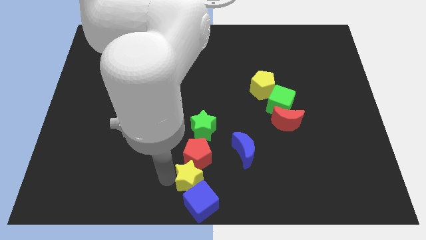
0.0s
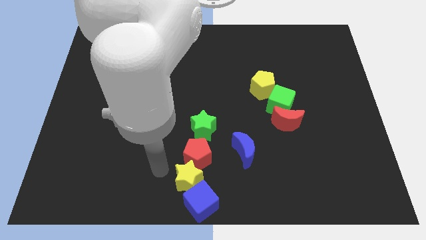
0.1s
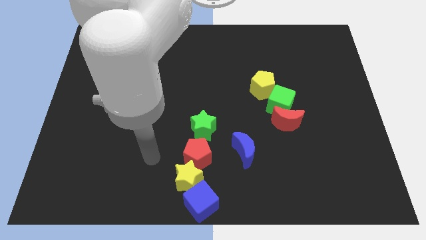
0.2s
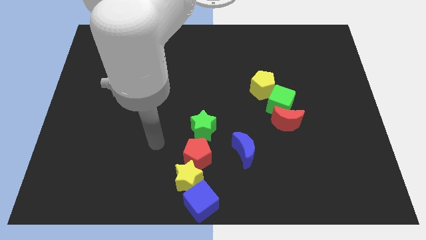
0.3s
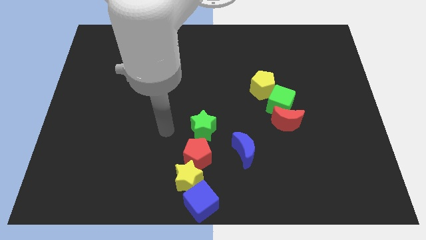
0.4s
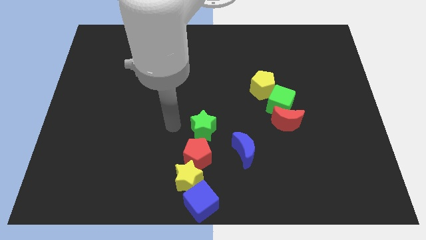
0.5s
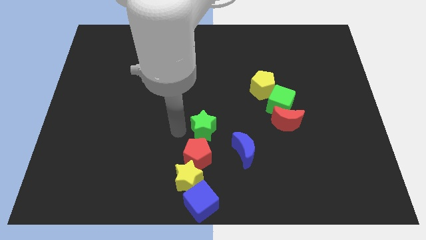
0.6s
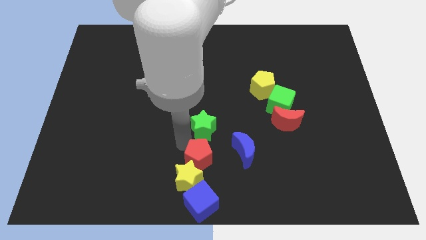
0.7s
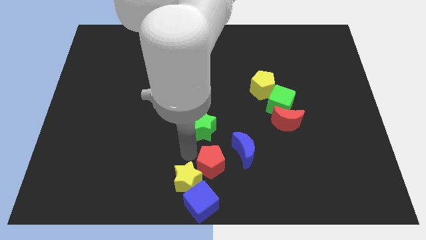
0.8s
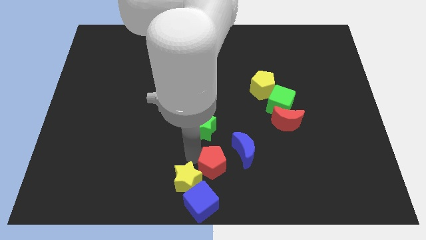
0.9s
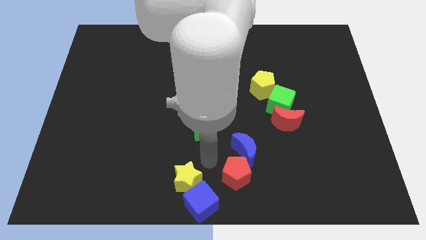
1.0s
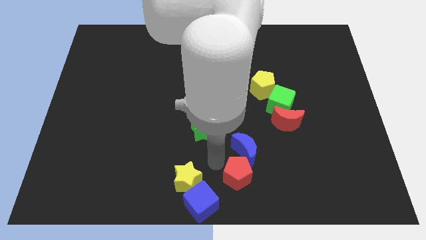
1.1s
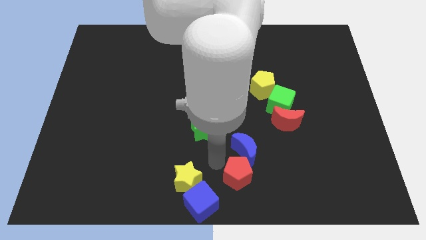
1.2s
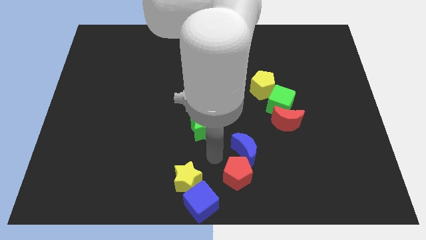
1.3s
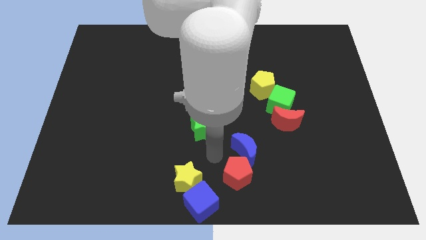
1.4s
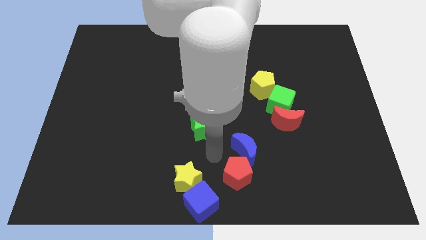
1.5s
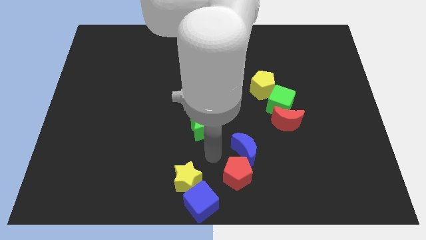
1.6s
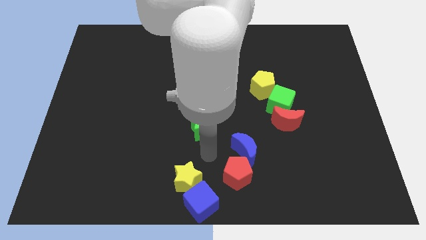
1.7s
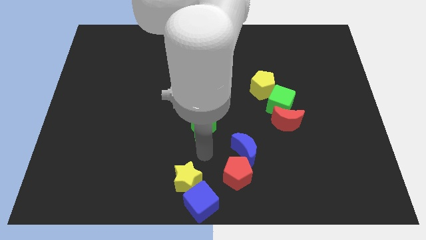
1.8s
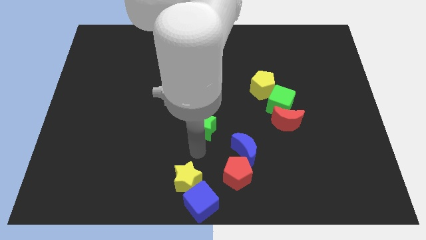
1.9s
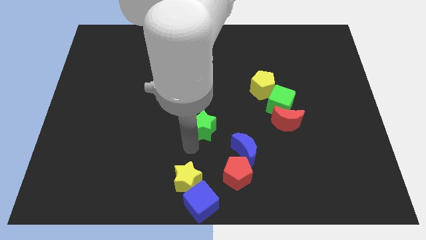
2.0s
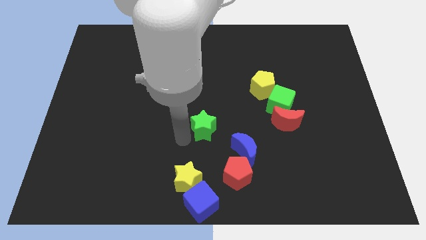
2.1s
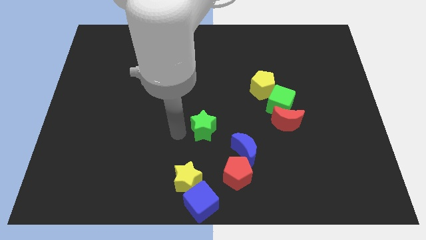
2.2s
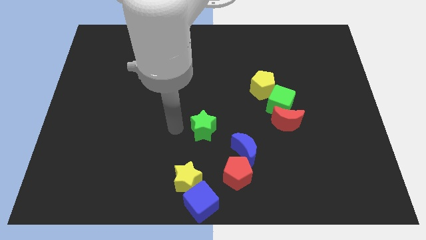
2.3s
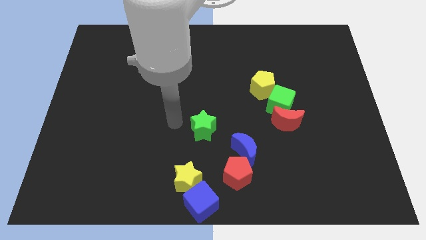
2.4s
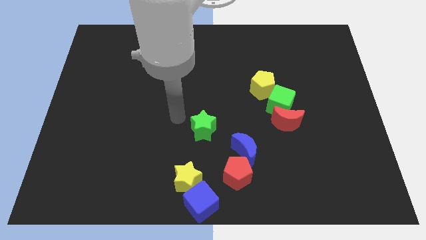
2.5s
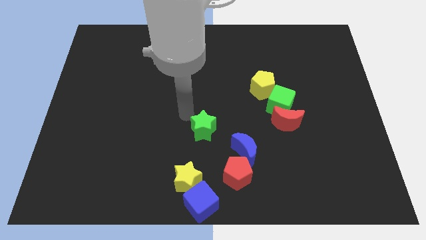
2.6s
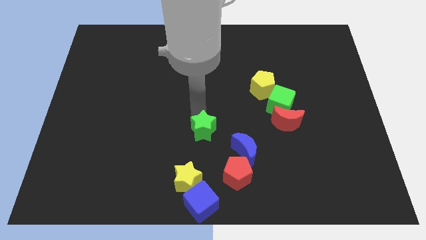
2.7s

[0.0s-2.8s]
push the red pentagon into the blue crescent

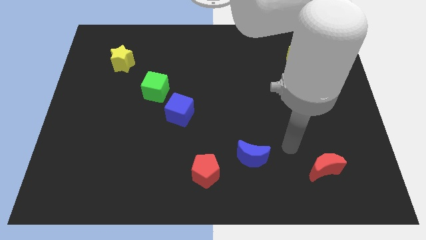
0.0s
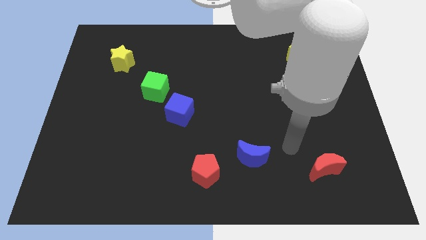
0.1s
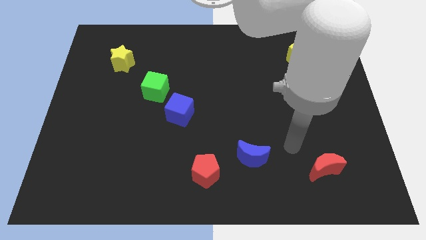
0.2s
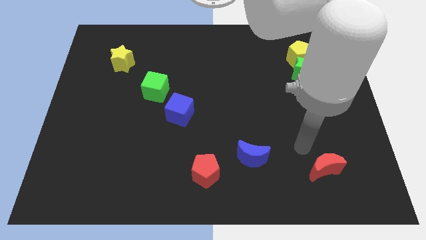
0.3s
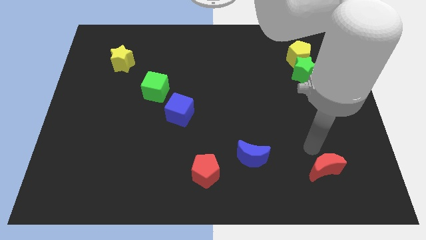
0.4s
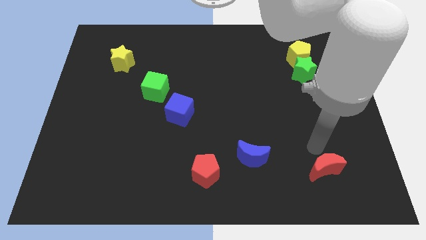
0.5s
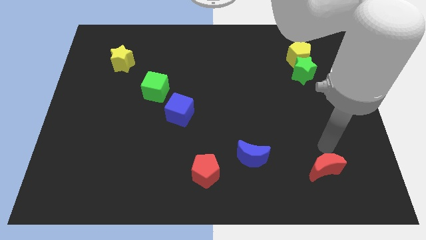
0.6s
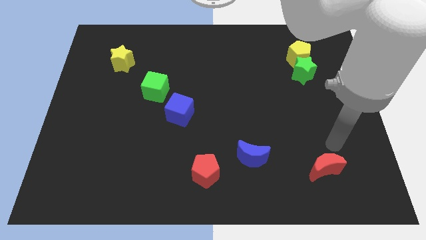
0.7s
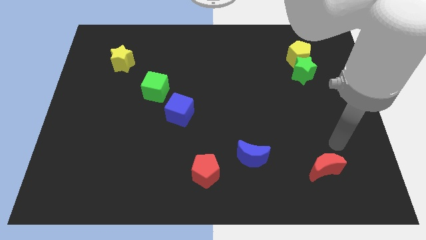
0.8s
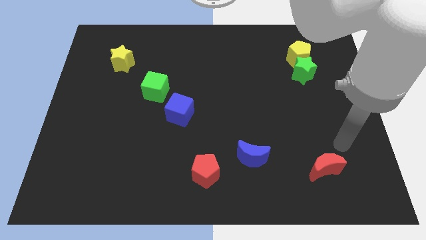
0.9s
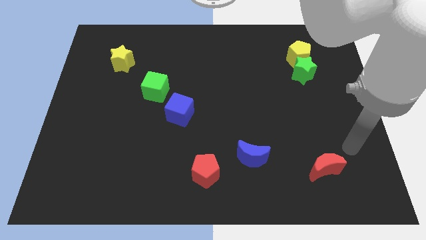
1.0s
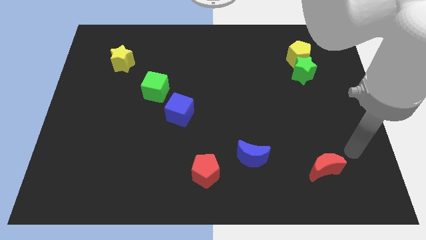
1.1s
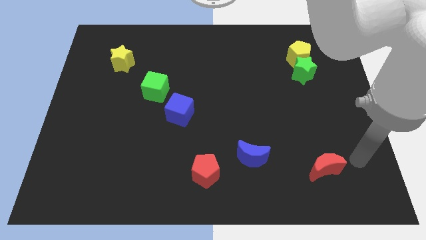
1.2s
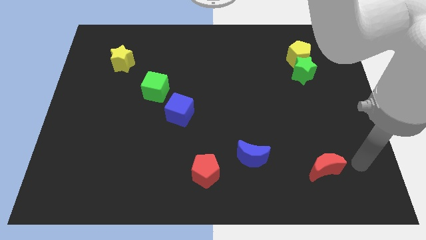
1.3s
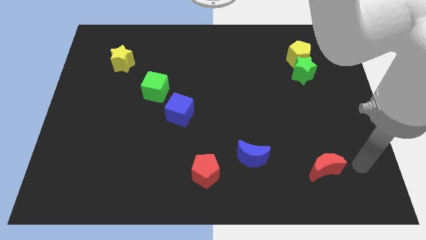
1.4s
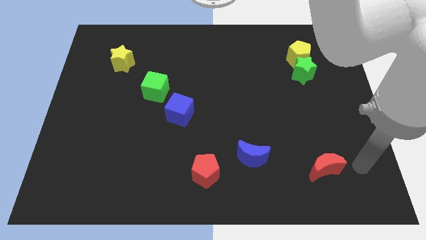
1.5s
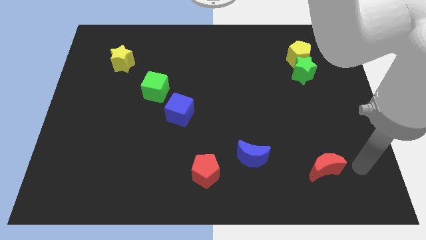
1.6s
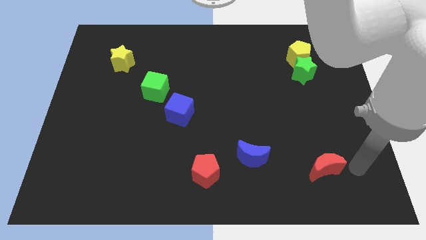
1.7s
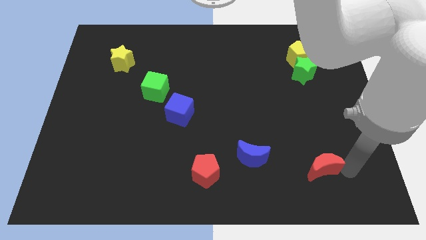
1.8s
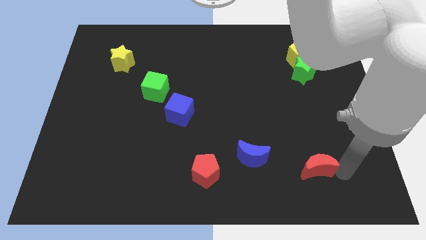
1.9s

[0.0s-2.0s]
touch at the right side of the red crescent

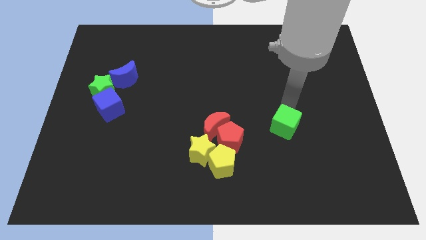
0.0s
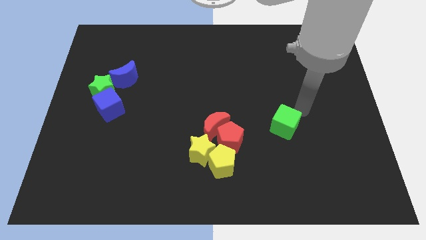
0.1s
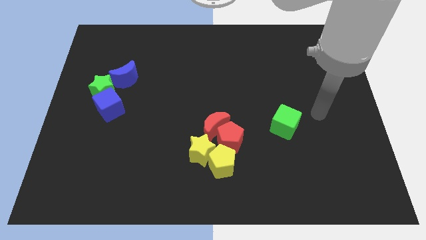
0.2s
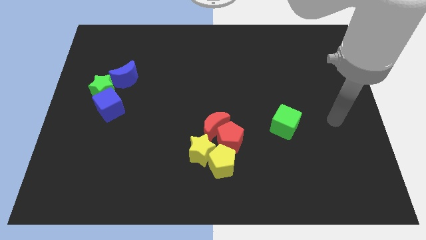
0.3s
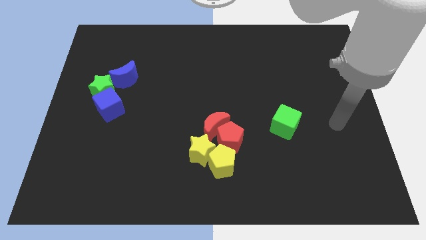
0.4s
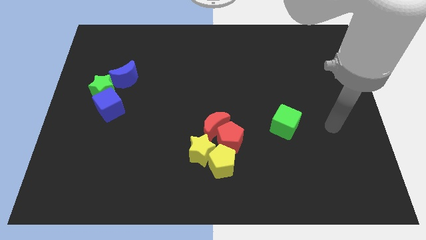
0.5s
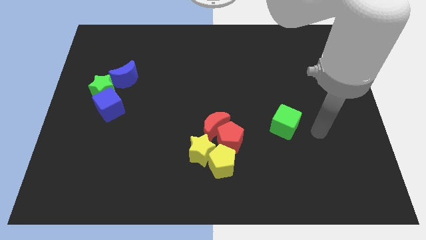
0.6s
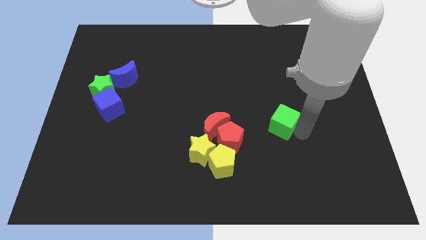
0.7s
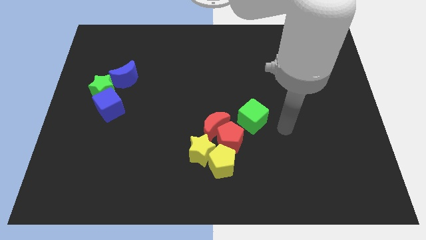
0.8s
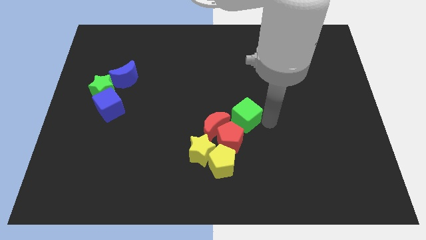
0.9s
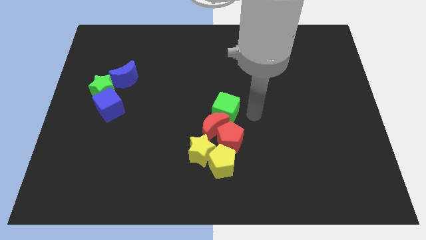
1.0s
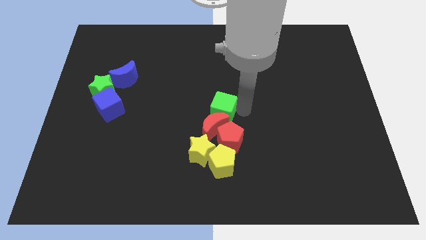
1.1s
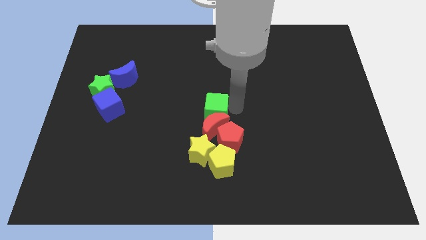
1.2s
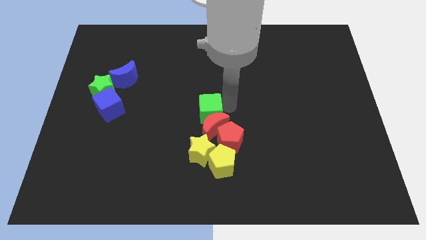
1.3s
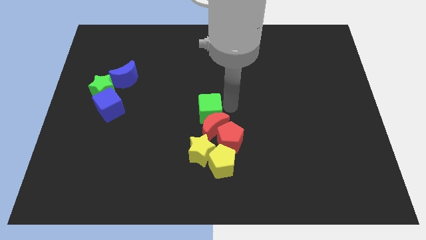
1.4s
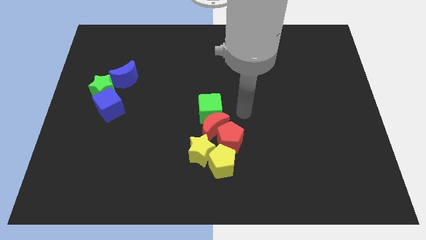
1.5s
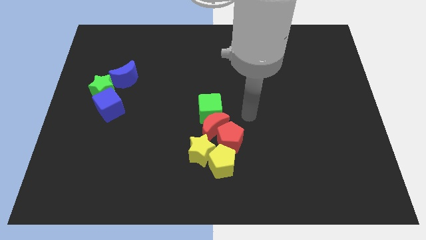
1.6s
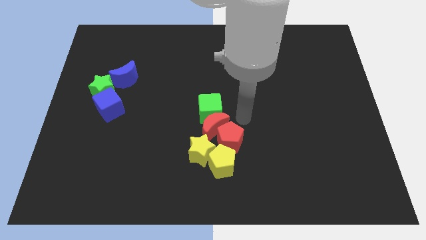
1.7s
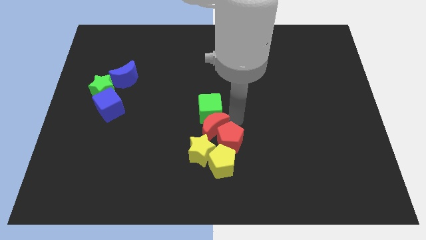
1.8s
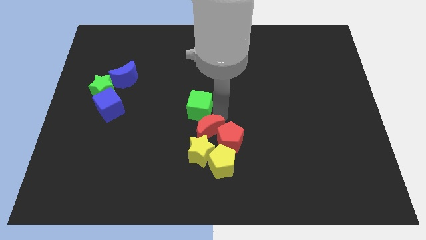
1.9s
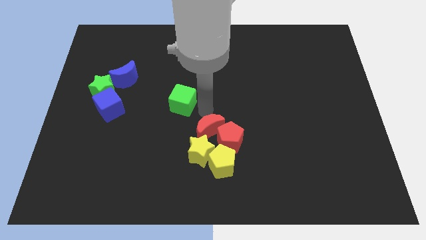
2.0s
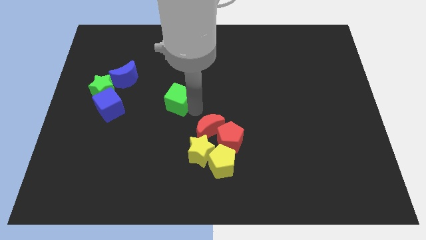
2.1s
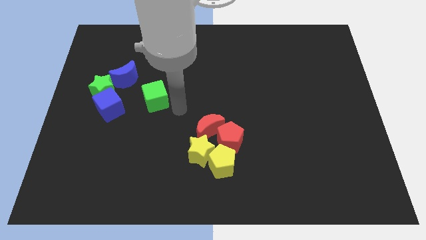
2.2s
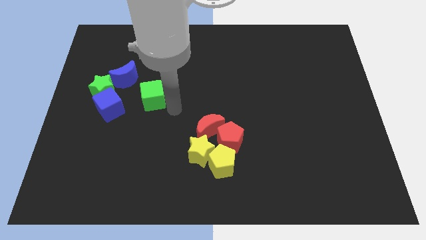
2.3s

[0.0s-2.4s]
place the green cube in between the red moon and blue moon

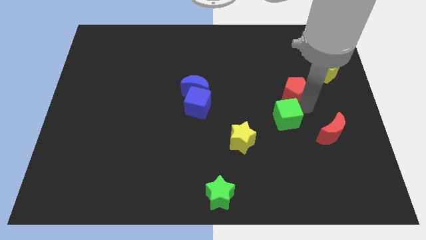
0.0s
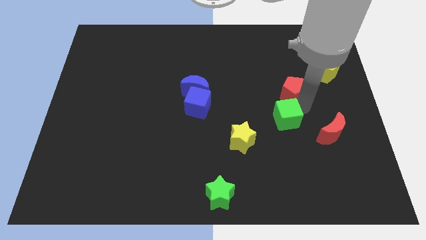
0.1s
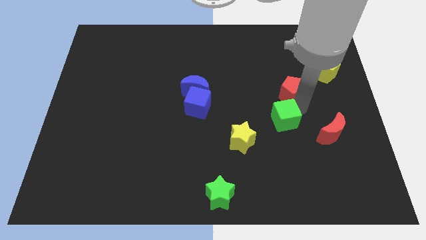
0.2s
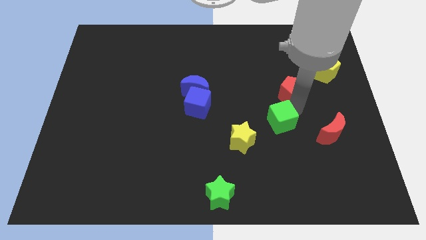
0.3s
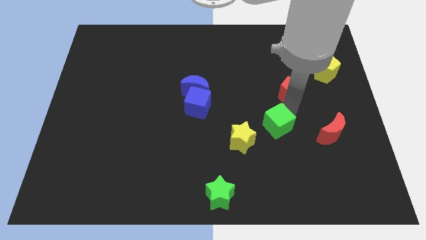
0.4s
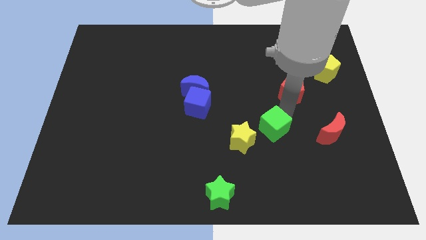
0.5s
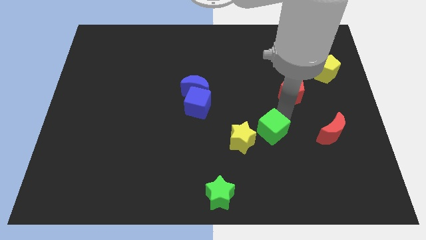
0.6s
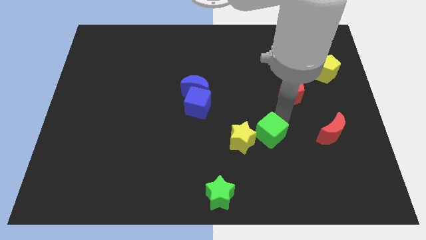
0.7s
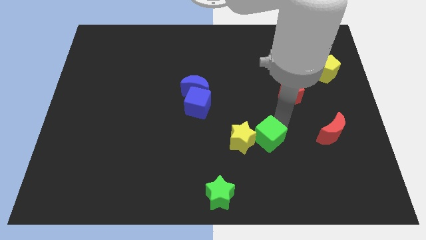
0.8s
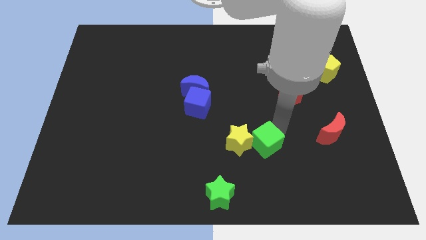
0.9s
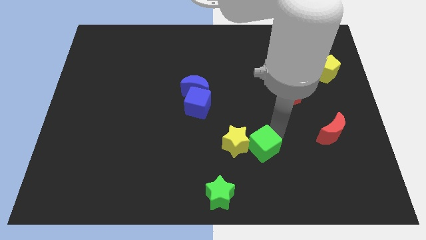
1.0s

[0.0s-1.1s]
move the green cube right to the yellow star

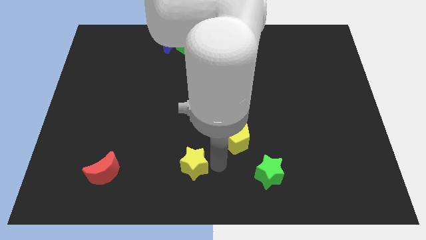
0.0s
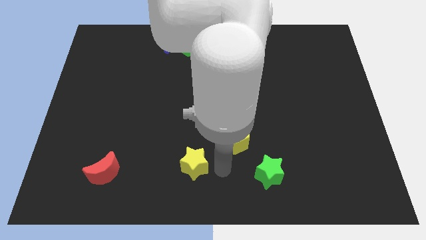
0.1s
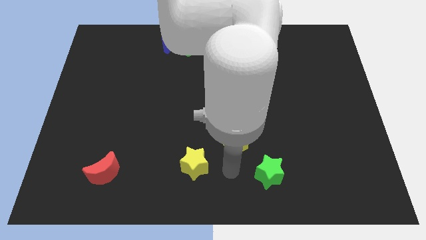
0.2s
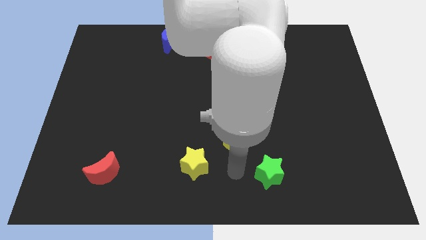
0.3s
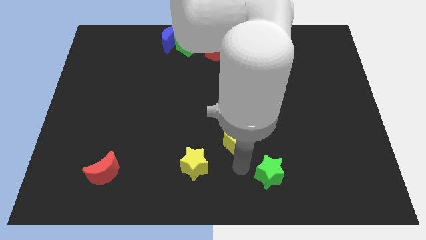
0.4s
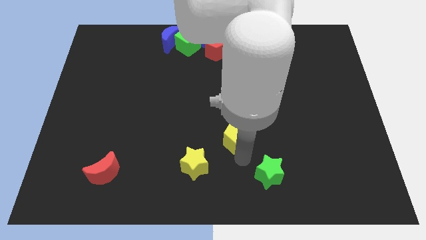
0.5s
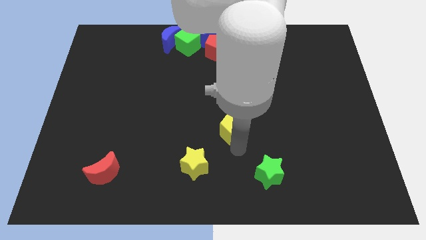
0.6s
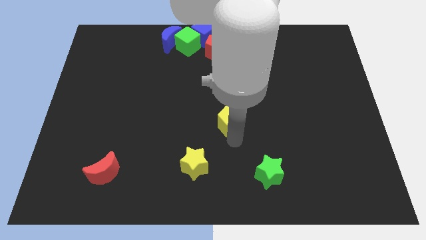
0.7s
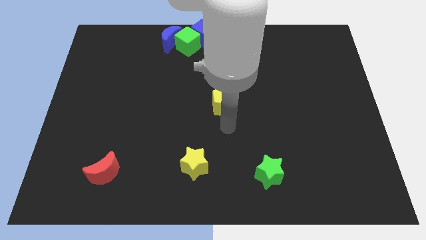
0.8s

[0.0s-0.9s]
move the yellow pentagon slightly upward
